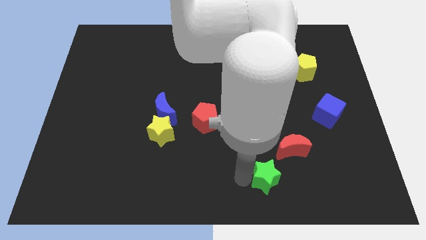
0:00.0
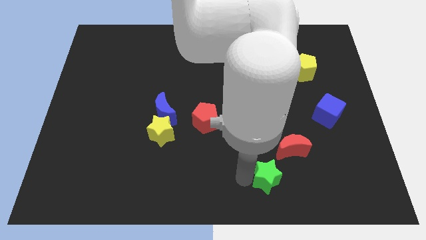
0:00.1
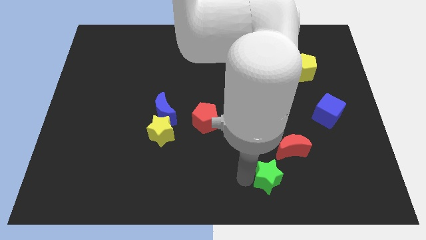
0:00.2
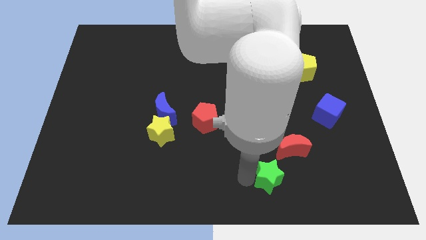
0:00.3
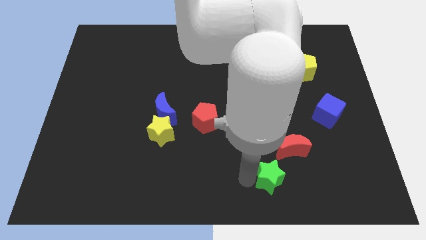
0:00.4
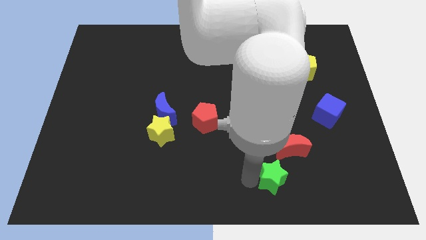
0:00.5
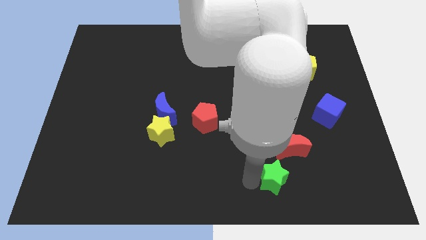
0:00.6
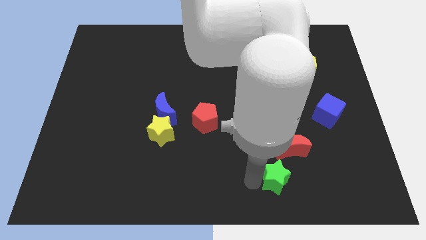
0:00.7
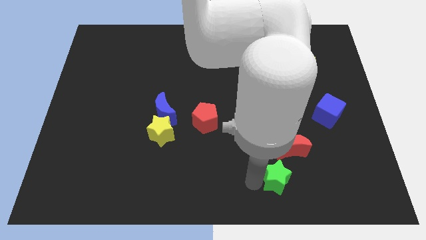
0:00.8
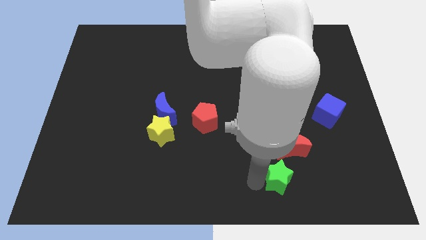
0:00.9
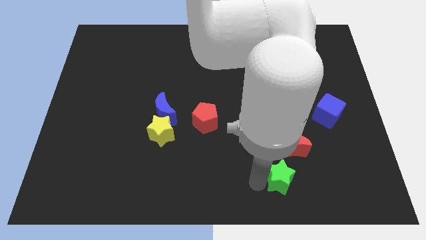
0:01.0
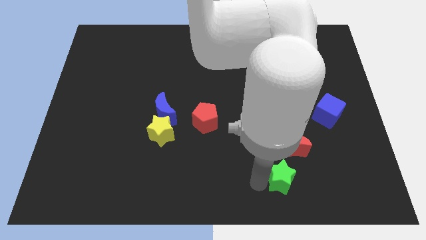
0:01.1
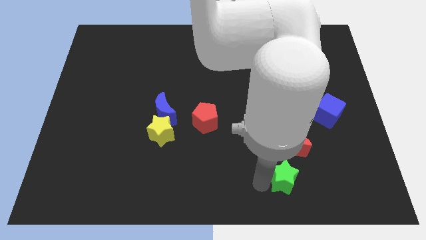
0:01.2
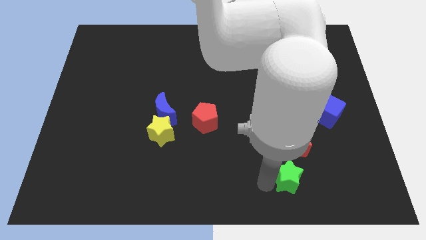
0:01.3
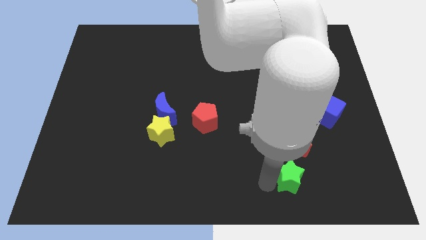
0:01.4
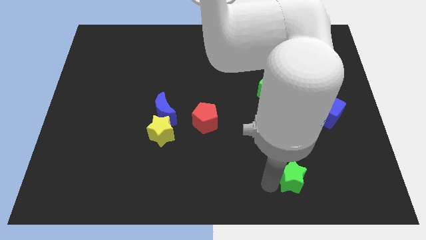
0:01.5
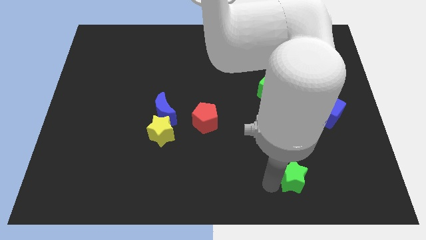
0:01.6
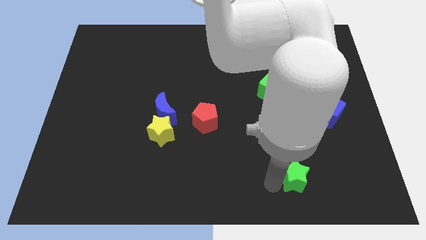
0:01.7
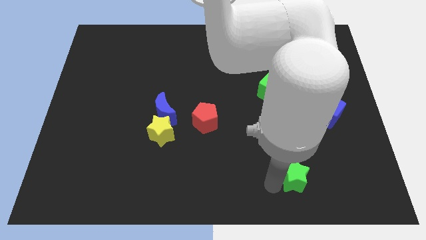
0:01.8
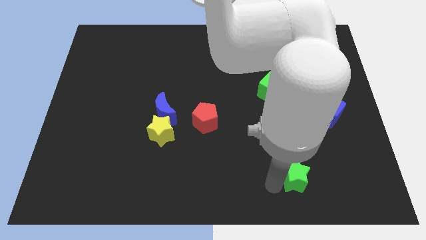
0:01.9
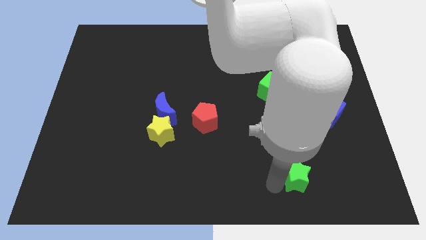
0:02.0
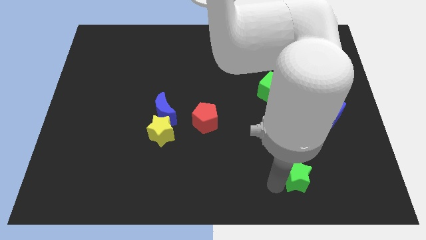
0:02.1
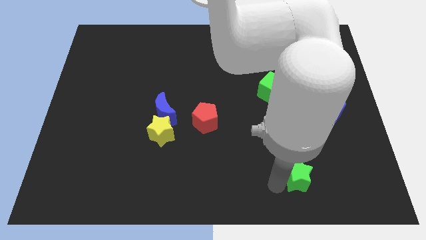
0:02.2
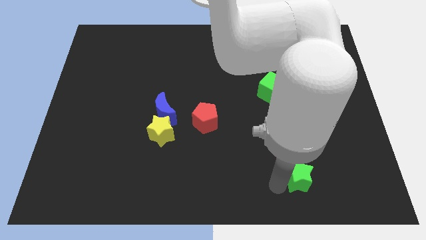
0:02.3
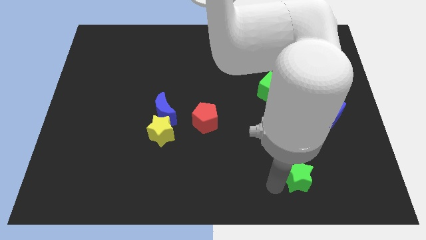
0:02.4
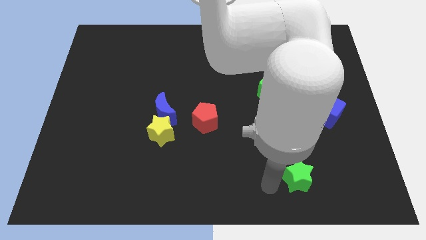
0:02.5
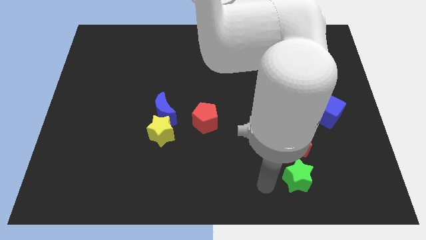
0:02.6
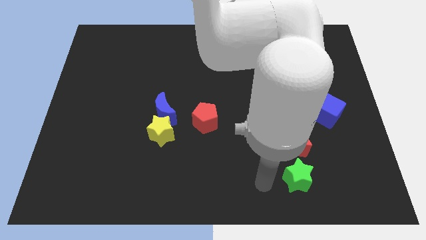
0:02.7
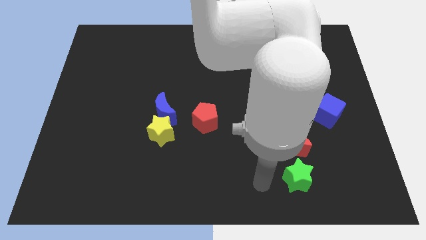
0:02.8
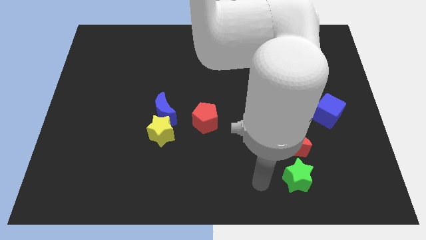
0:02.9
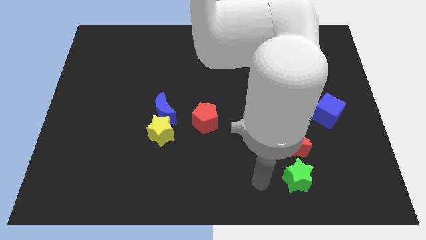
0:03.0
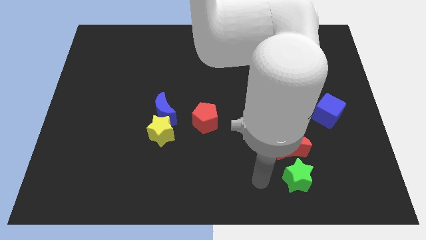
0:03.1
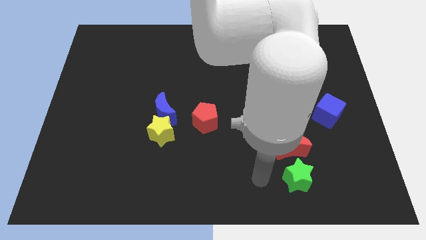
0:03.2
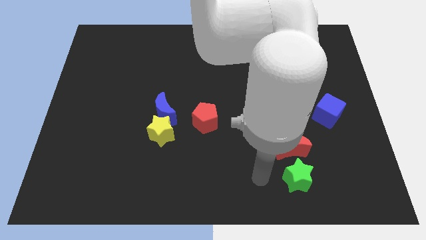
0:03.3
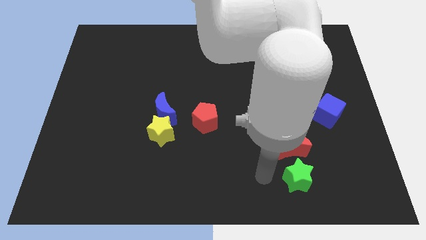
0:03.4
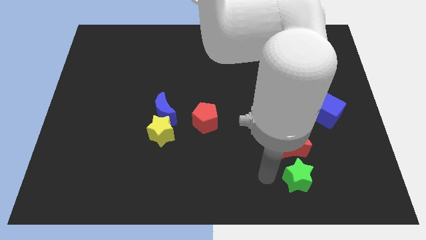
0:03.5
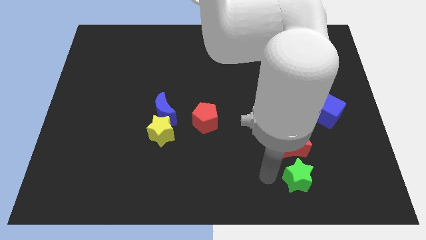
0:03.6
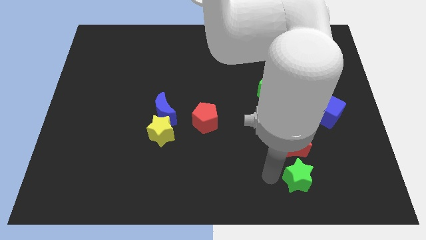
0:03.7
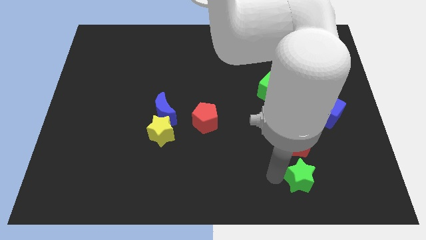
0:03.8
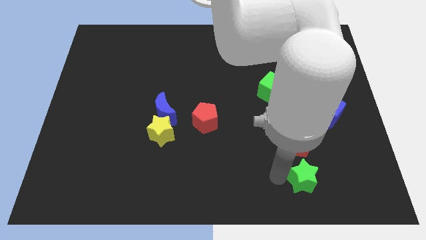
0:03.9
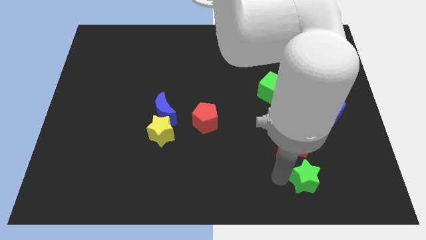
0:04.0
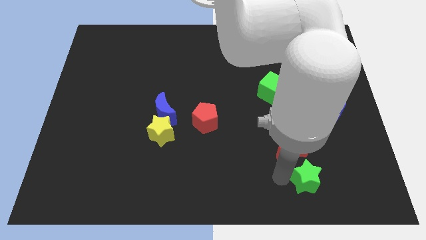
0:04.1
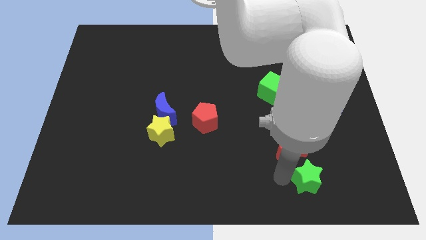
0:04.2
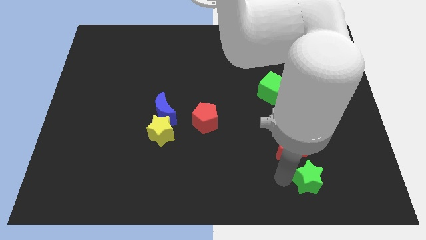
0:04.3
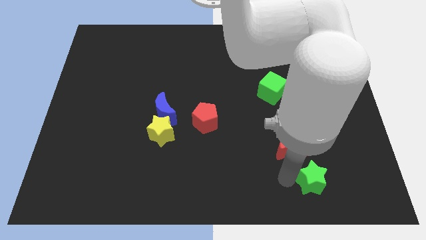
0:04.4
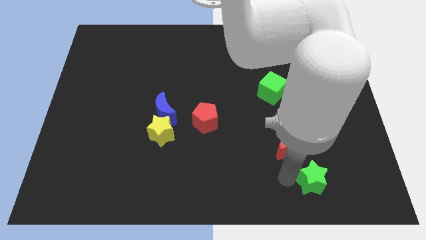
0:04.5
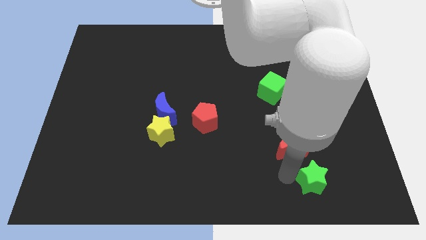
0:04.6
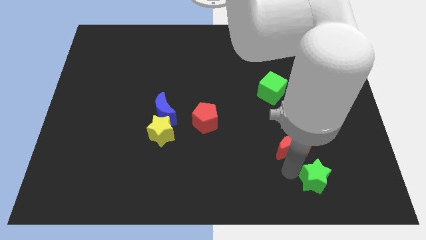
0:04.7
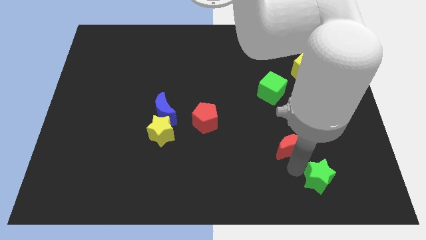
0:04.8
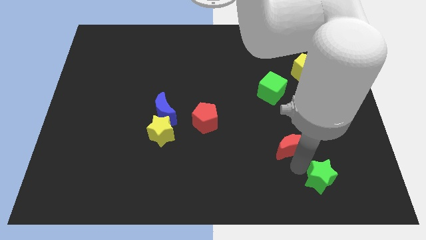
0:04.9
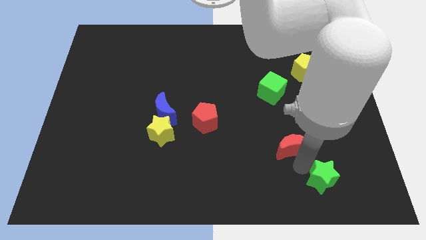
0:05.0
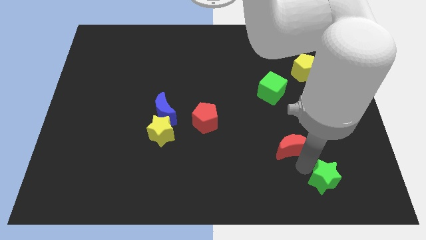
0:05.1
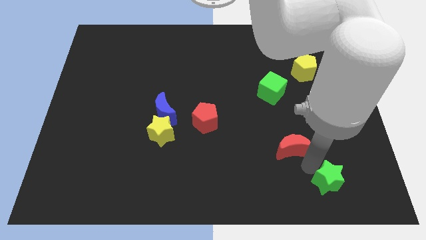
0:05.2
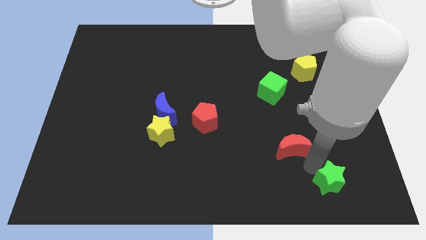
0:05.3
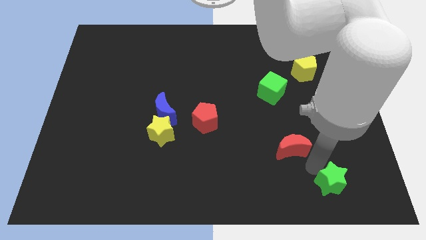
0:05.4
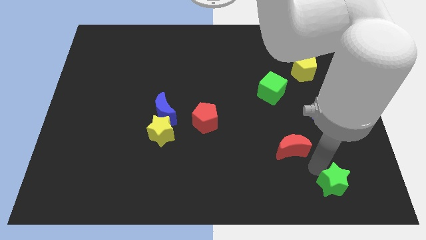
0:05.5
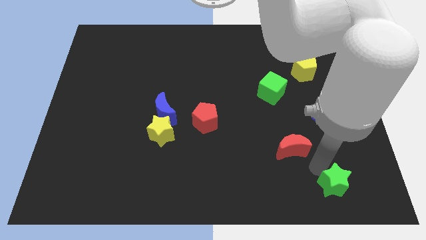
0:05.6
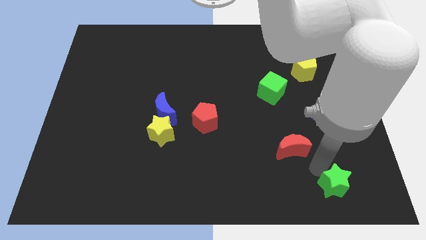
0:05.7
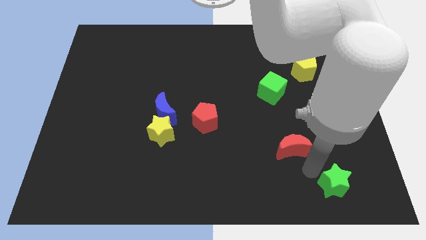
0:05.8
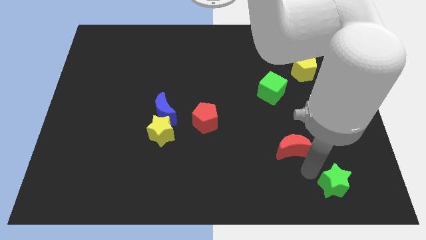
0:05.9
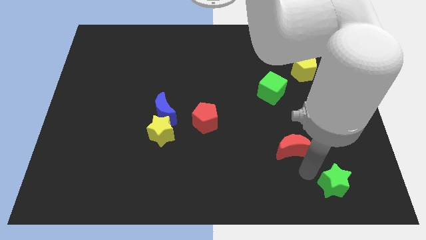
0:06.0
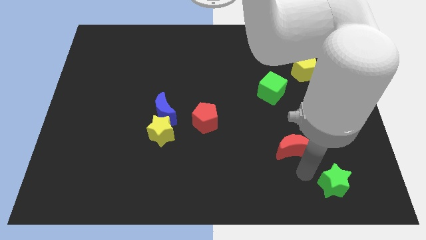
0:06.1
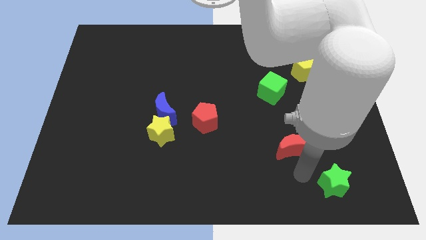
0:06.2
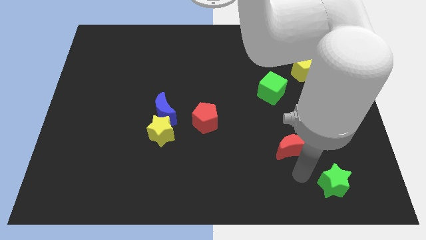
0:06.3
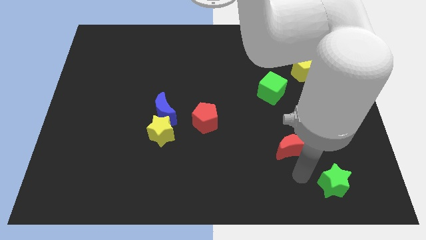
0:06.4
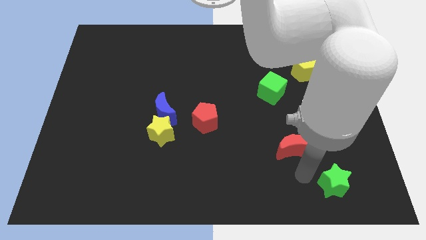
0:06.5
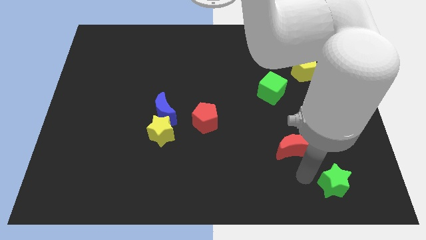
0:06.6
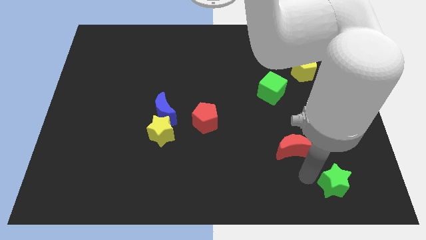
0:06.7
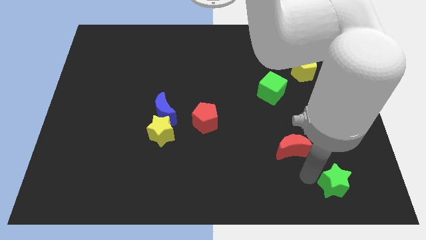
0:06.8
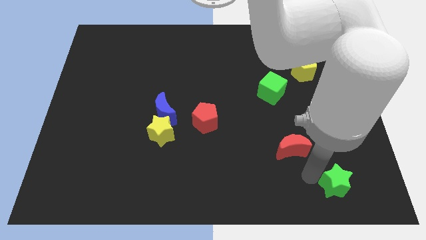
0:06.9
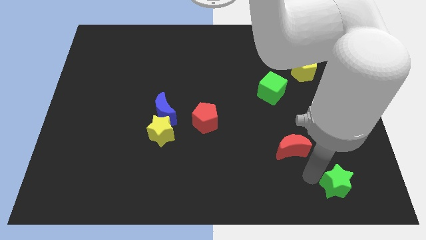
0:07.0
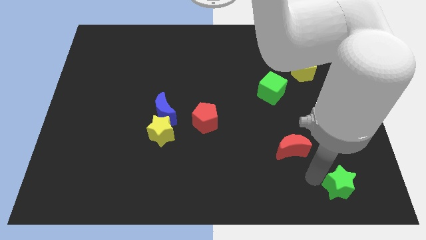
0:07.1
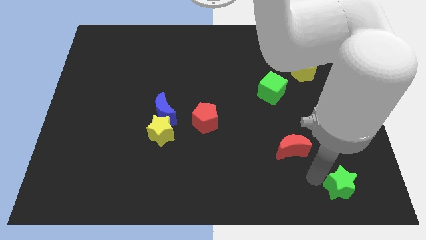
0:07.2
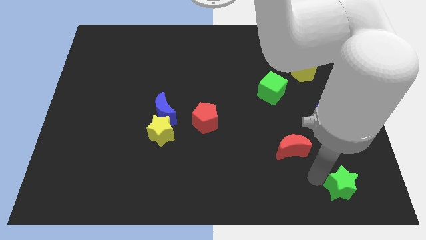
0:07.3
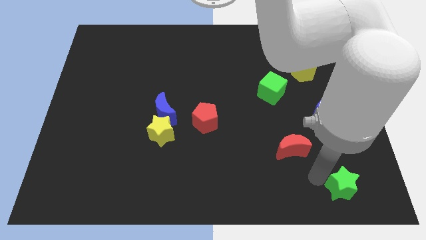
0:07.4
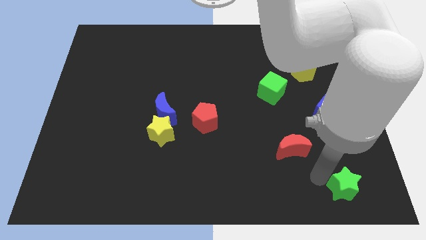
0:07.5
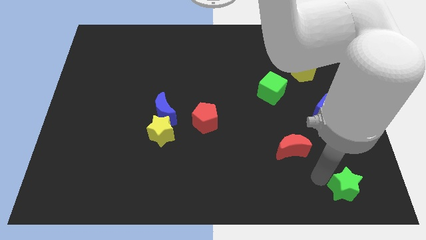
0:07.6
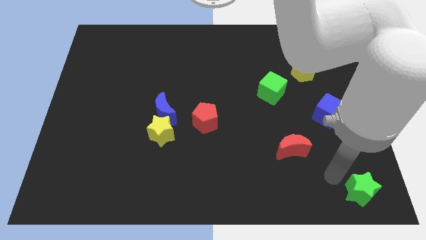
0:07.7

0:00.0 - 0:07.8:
move the green star to the bottom right corner

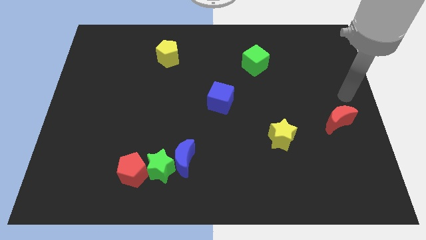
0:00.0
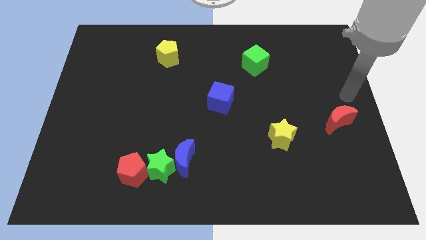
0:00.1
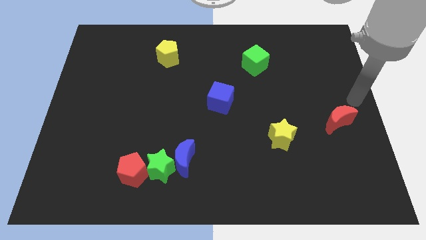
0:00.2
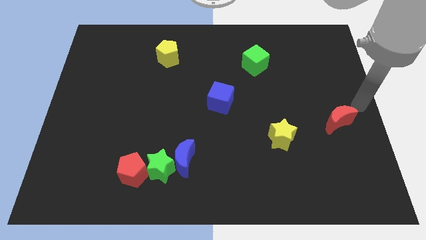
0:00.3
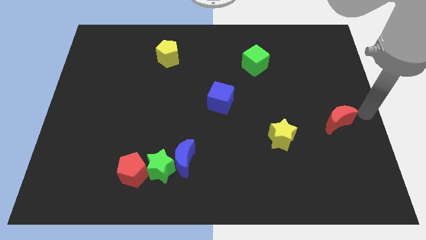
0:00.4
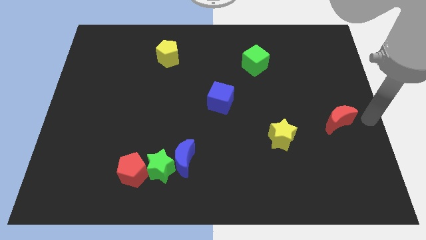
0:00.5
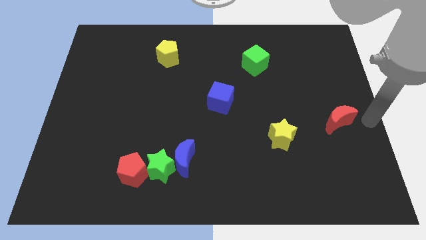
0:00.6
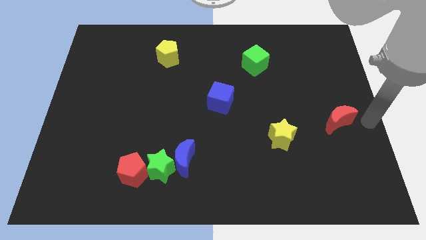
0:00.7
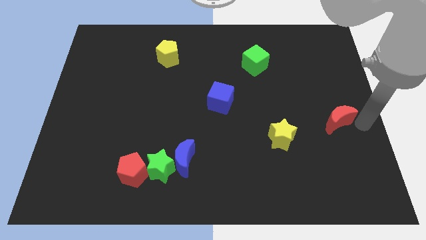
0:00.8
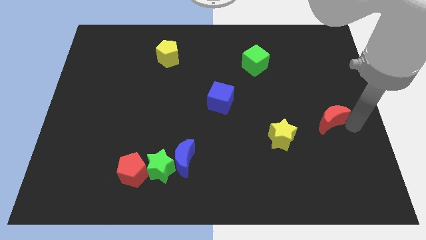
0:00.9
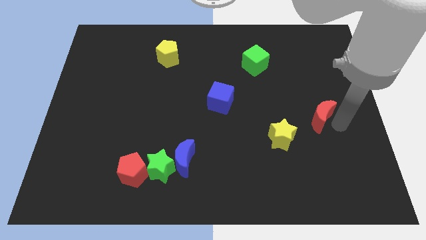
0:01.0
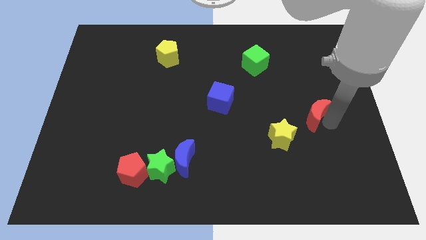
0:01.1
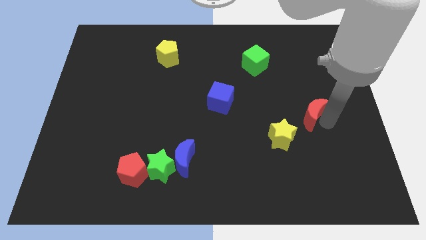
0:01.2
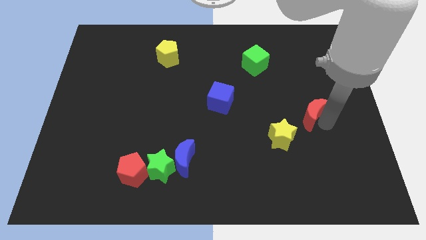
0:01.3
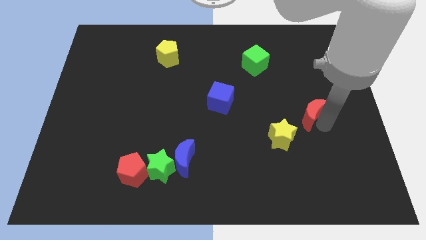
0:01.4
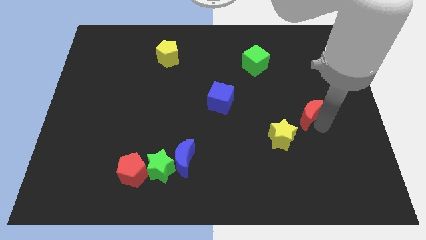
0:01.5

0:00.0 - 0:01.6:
move red moon to the top right of yellow star
